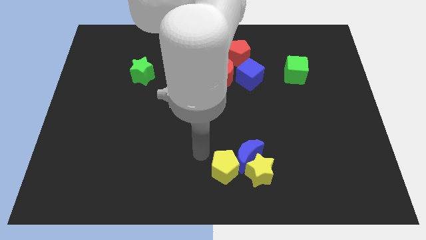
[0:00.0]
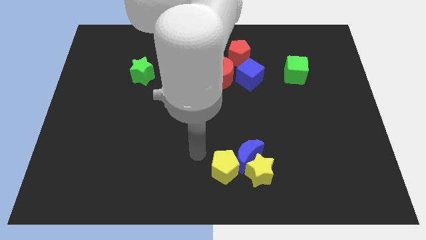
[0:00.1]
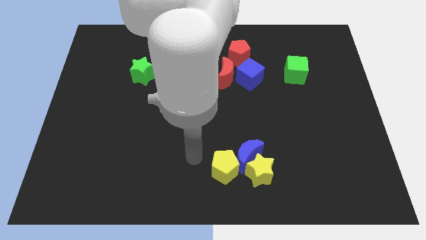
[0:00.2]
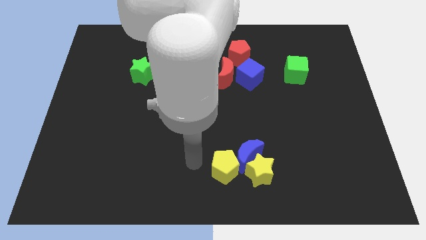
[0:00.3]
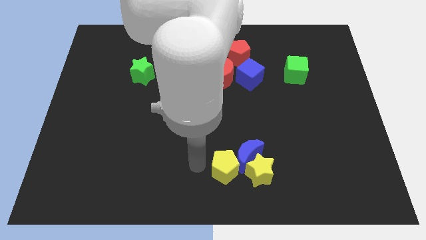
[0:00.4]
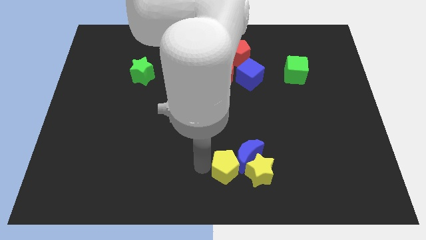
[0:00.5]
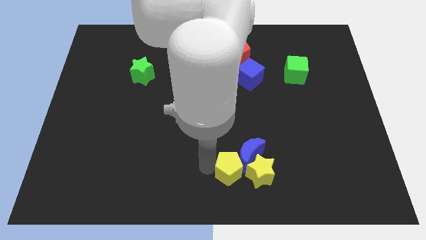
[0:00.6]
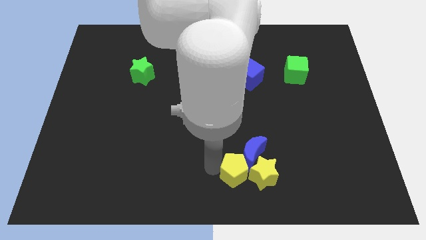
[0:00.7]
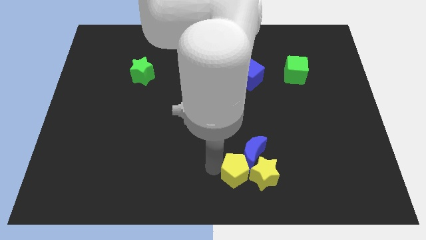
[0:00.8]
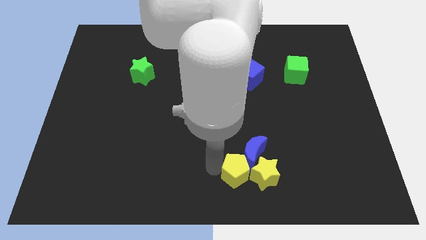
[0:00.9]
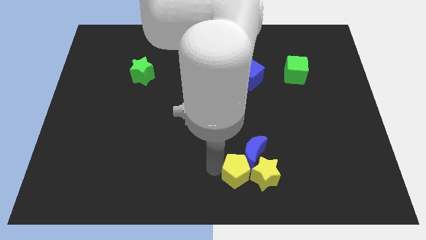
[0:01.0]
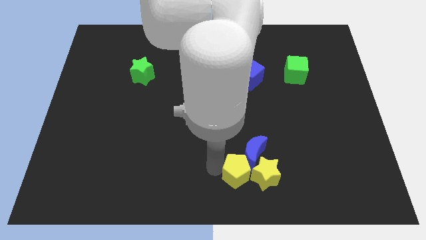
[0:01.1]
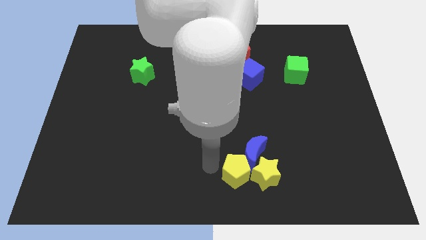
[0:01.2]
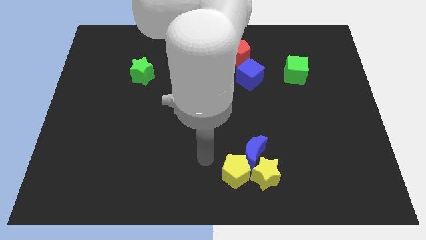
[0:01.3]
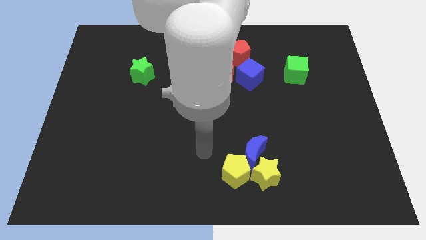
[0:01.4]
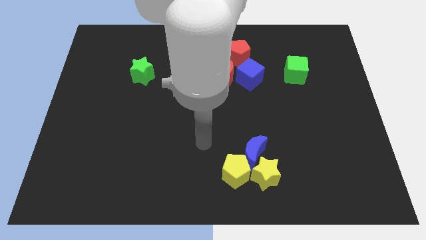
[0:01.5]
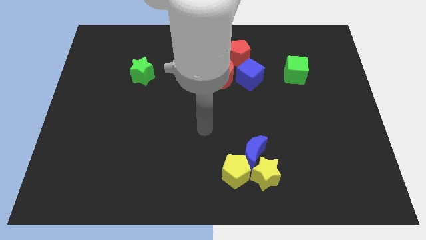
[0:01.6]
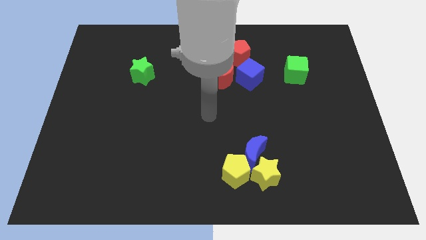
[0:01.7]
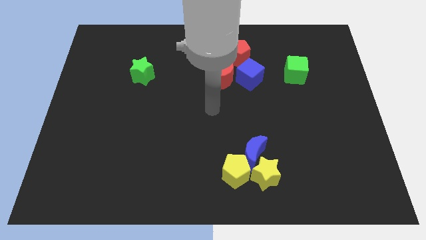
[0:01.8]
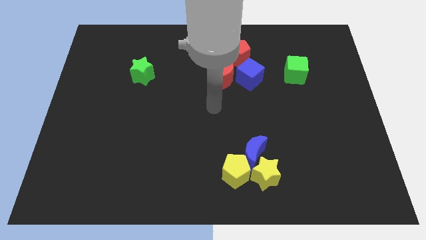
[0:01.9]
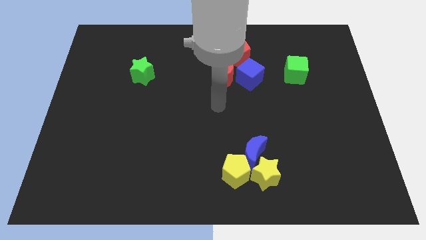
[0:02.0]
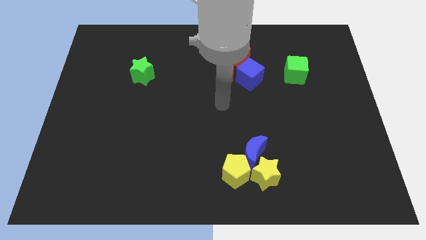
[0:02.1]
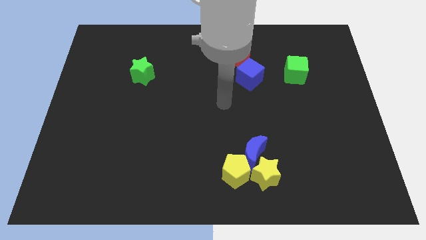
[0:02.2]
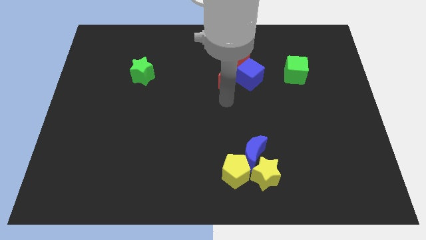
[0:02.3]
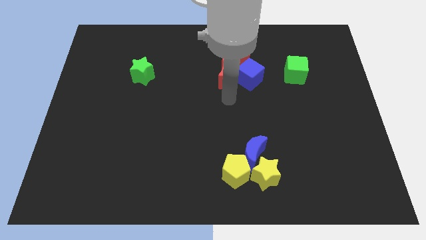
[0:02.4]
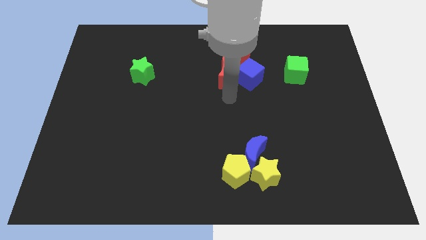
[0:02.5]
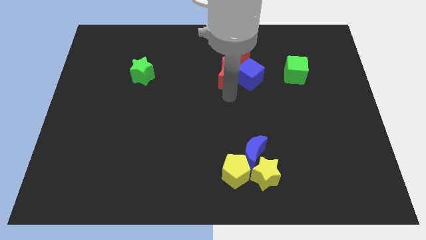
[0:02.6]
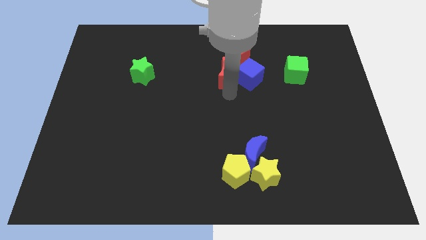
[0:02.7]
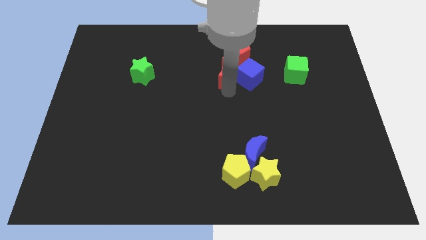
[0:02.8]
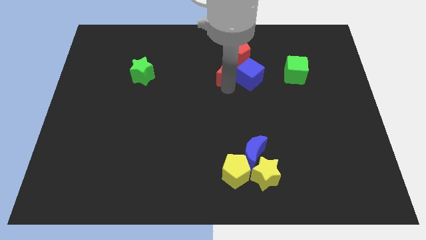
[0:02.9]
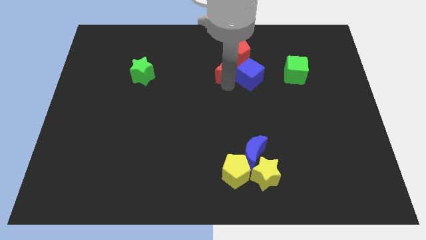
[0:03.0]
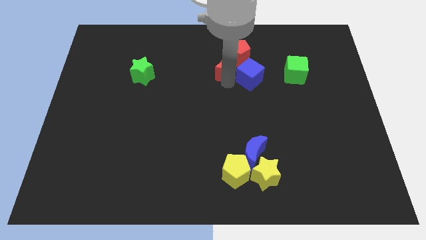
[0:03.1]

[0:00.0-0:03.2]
push the yellow pentagon in to the yellow star

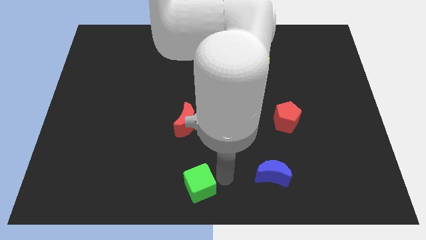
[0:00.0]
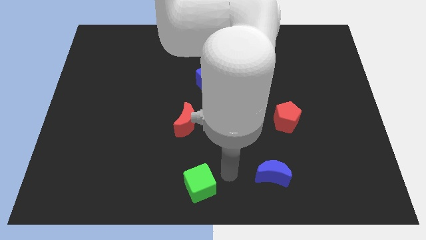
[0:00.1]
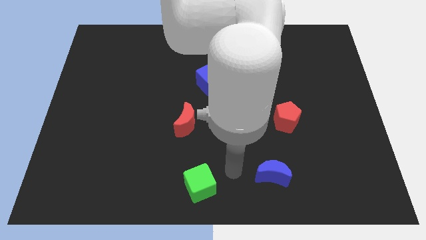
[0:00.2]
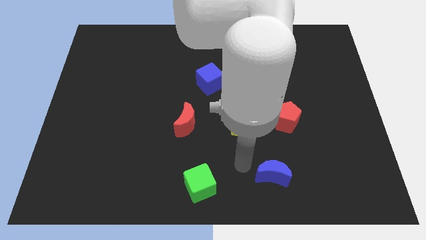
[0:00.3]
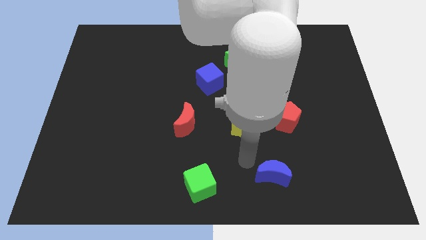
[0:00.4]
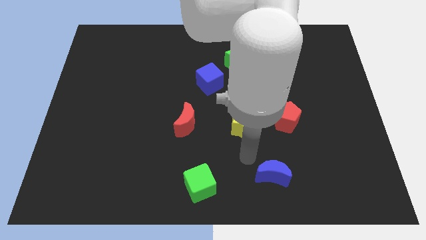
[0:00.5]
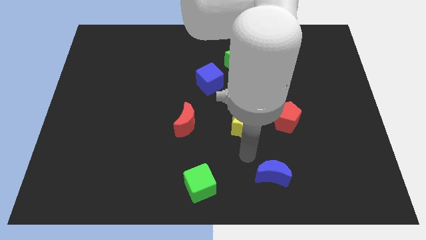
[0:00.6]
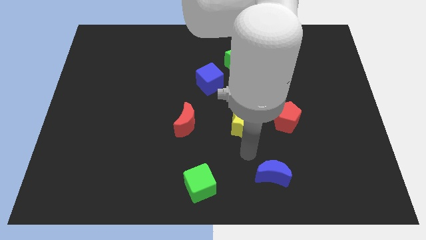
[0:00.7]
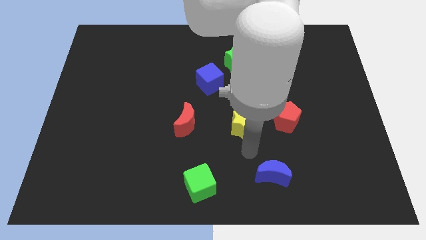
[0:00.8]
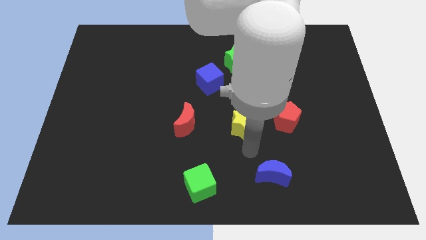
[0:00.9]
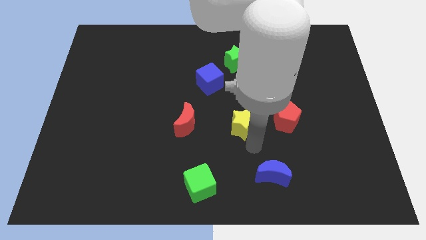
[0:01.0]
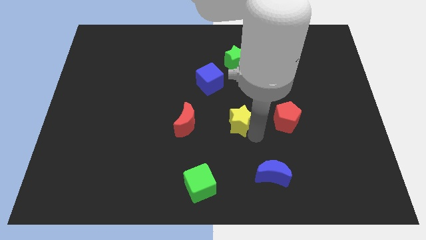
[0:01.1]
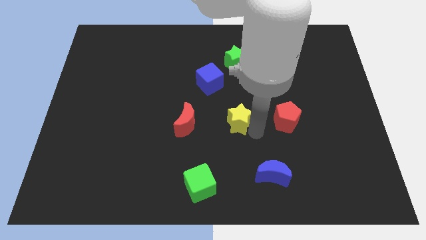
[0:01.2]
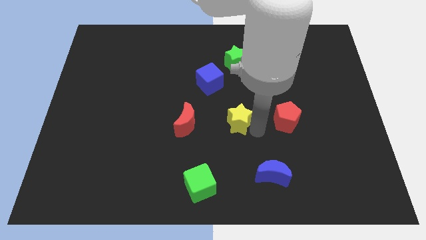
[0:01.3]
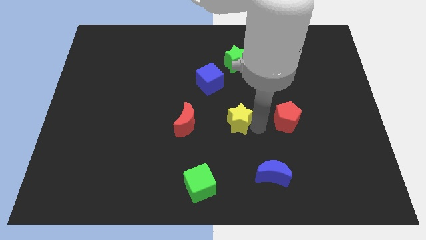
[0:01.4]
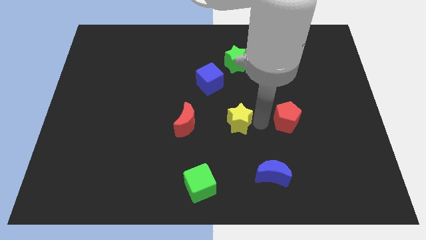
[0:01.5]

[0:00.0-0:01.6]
slightly move the yellow star upwards

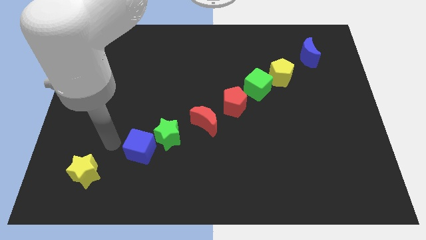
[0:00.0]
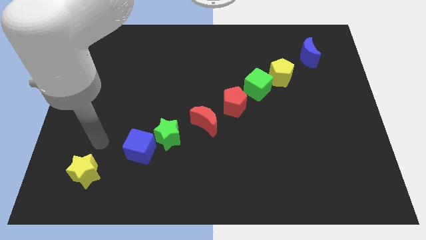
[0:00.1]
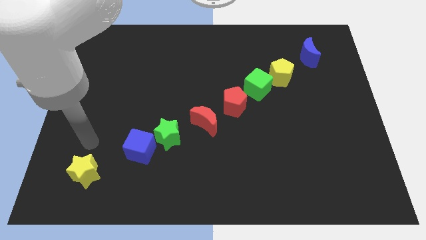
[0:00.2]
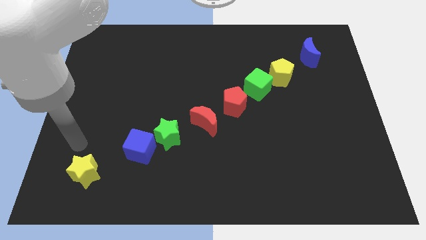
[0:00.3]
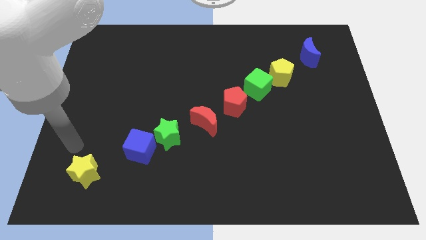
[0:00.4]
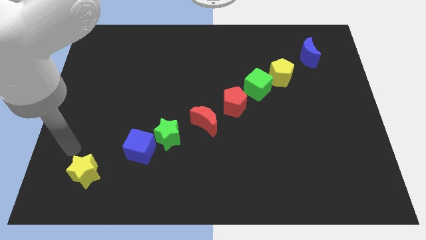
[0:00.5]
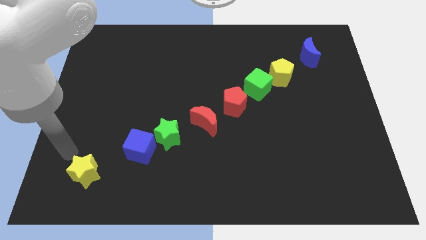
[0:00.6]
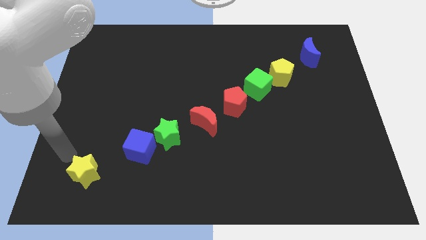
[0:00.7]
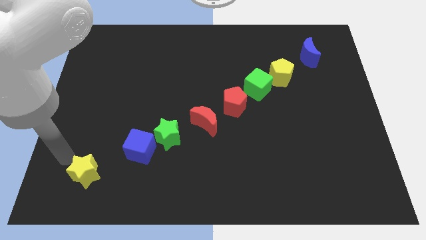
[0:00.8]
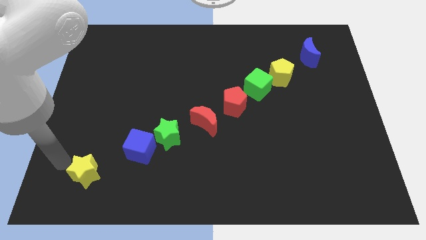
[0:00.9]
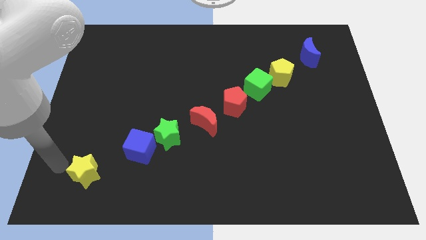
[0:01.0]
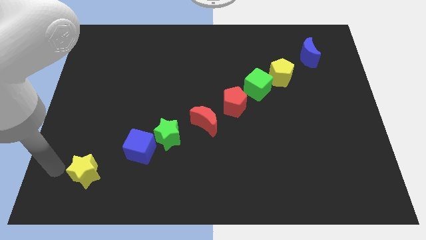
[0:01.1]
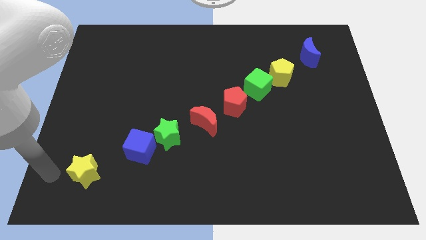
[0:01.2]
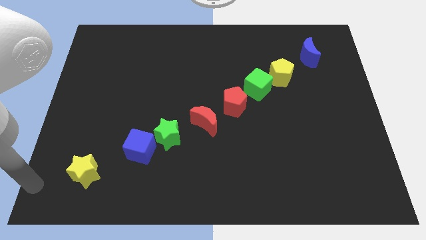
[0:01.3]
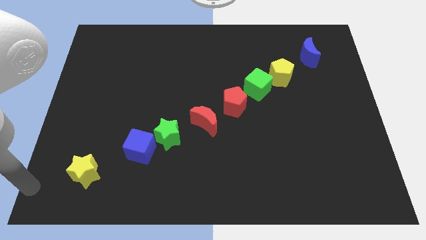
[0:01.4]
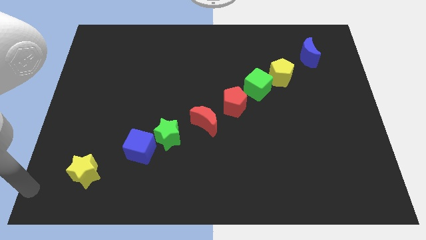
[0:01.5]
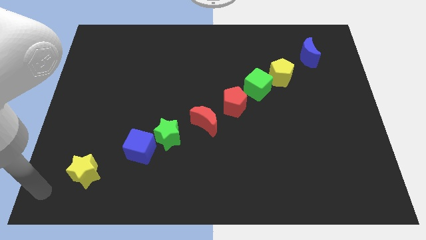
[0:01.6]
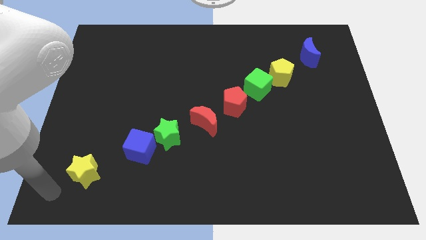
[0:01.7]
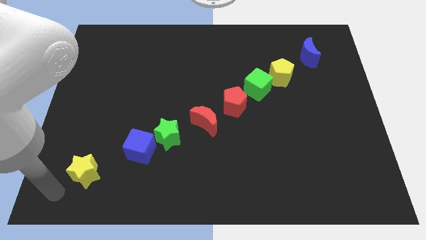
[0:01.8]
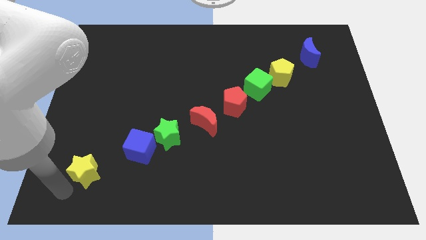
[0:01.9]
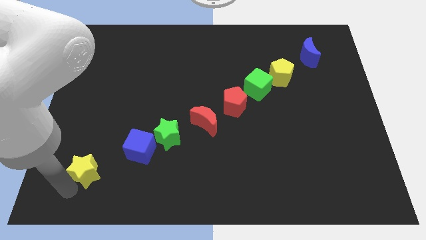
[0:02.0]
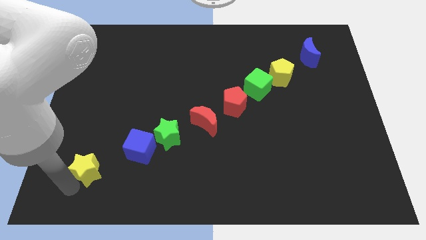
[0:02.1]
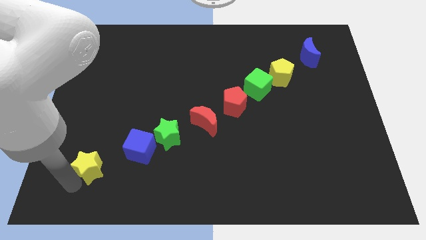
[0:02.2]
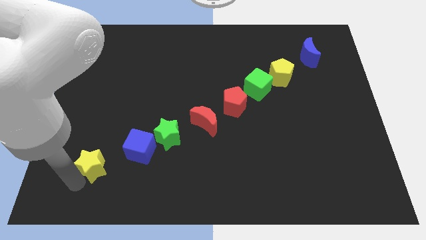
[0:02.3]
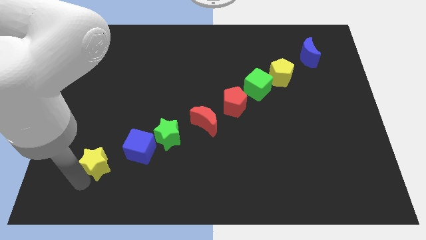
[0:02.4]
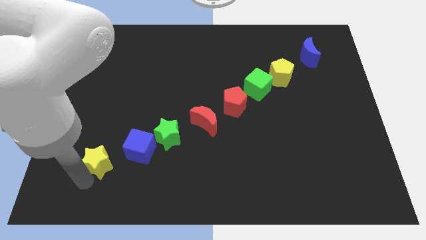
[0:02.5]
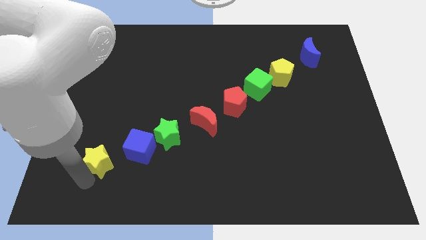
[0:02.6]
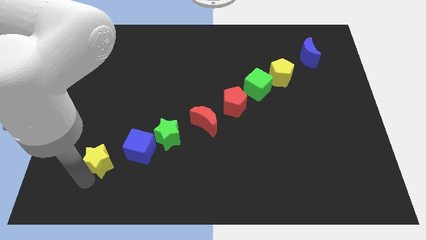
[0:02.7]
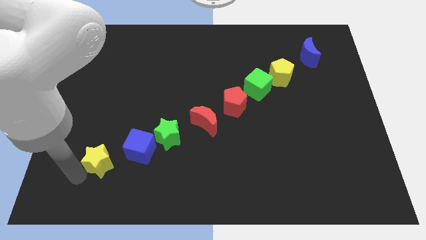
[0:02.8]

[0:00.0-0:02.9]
move your arm close to the yellow star

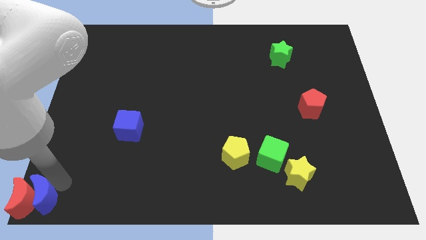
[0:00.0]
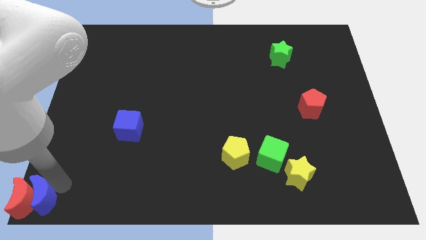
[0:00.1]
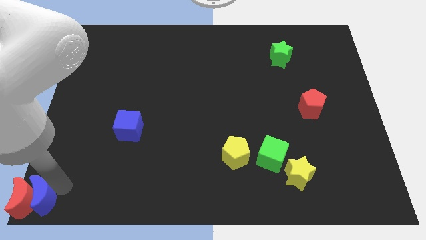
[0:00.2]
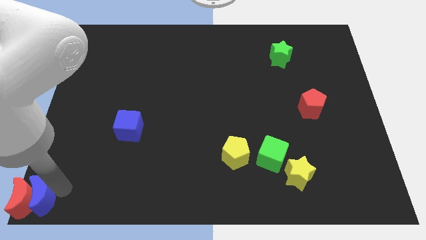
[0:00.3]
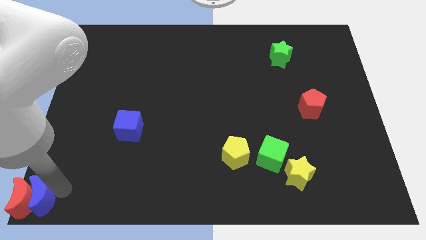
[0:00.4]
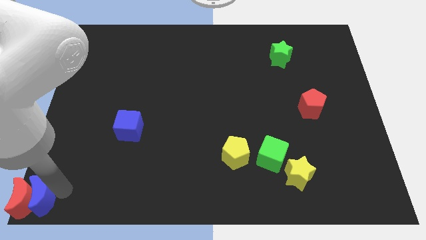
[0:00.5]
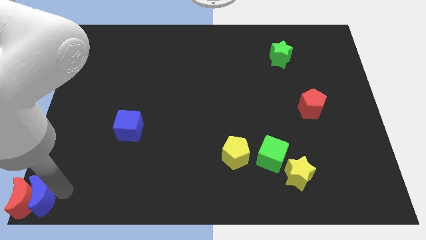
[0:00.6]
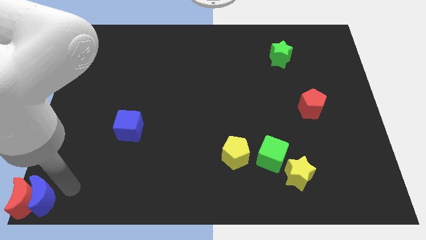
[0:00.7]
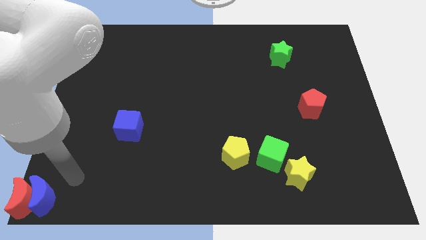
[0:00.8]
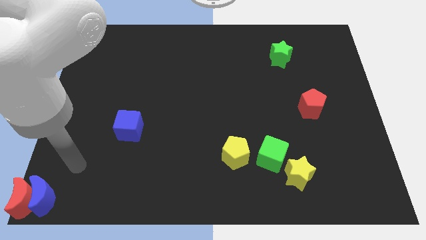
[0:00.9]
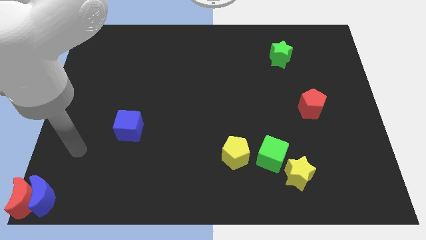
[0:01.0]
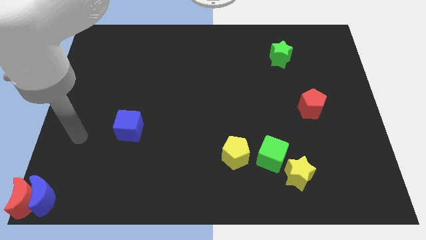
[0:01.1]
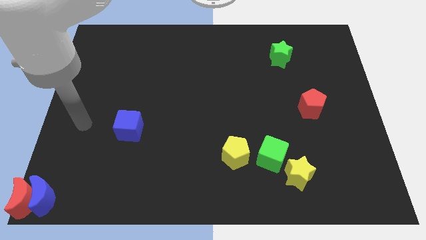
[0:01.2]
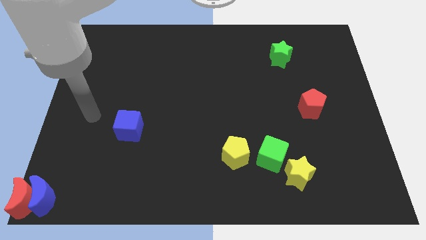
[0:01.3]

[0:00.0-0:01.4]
put the blue moon right side of the red crescent which is at the bottom left side
